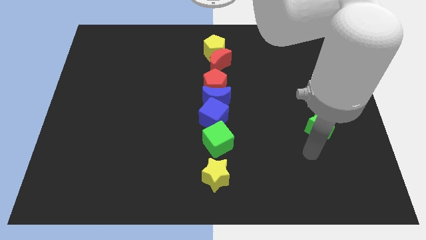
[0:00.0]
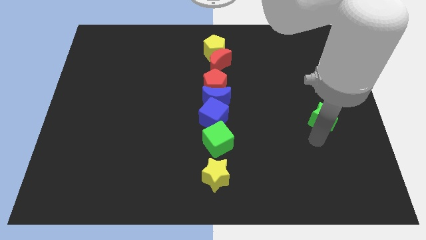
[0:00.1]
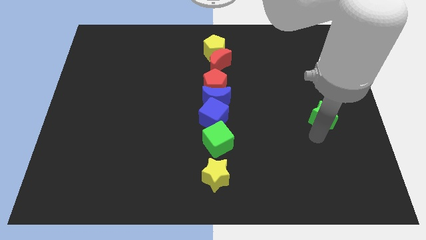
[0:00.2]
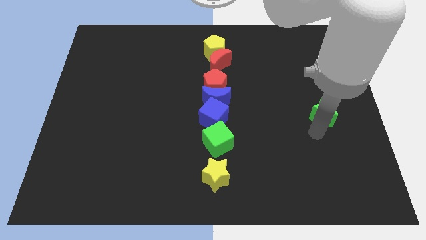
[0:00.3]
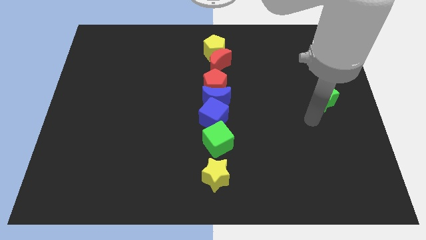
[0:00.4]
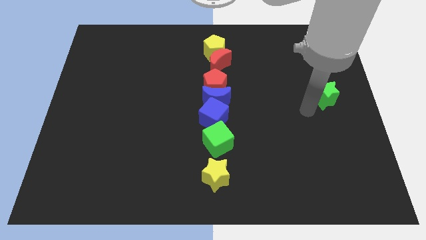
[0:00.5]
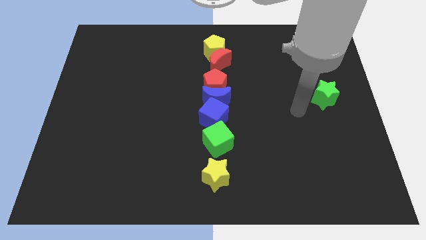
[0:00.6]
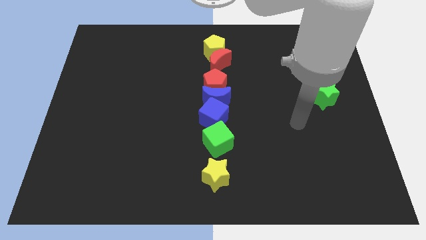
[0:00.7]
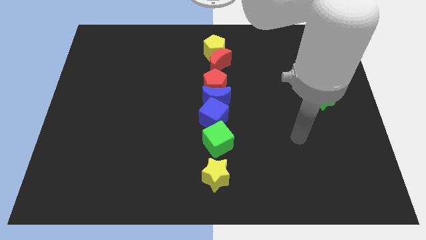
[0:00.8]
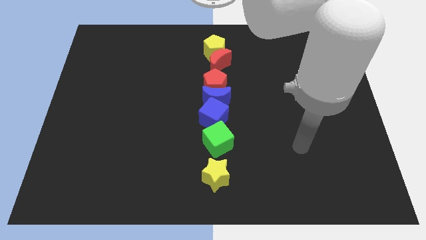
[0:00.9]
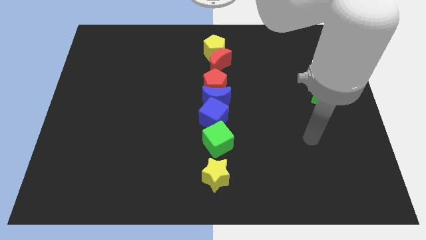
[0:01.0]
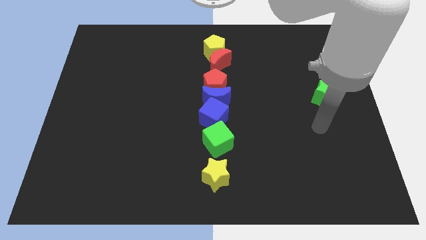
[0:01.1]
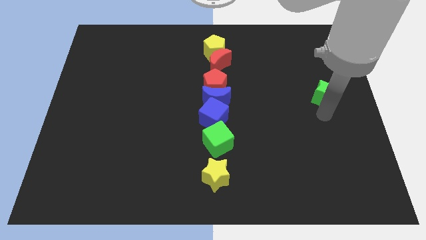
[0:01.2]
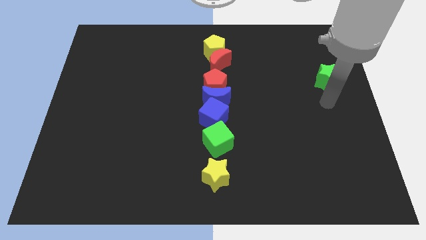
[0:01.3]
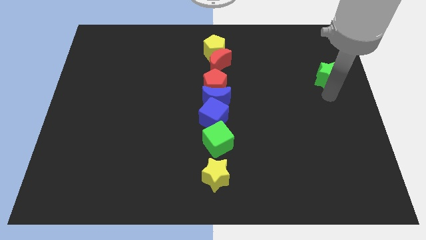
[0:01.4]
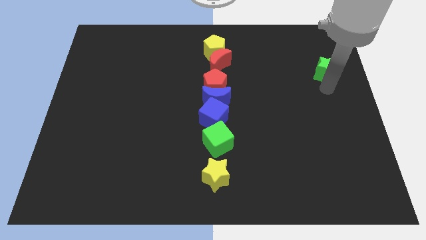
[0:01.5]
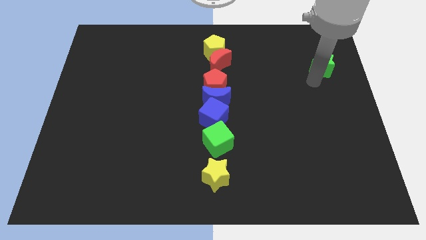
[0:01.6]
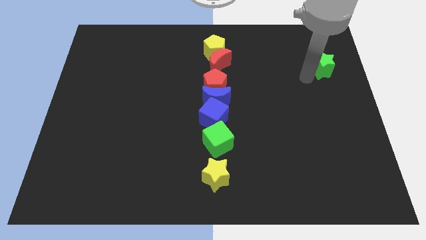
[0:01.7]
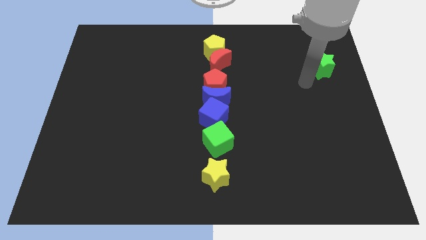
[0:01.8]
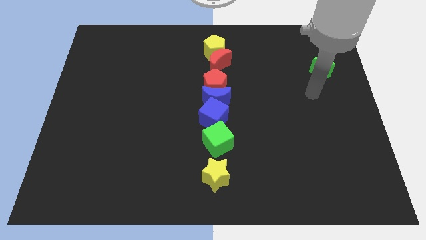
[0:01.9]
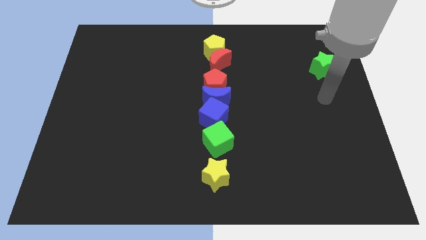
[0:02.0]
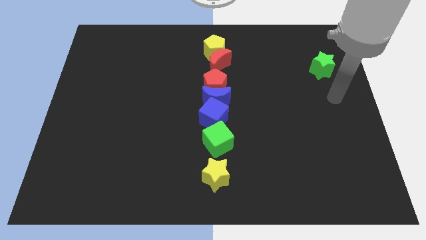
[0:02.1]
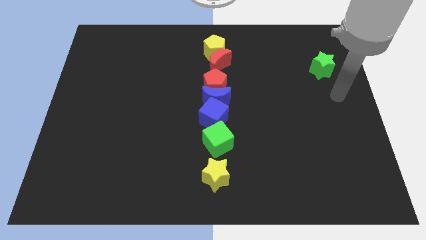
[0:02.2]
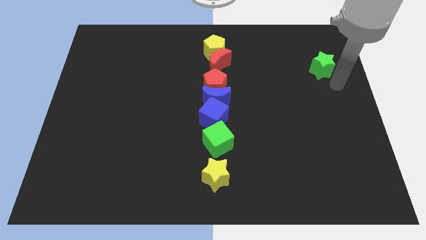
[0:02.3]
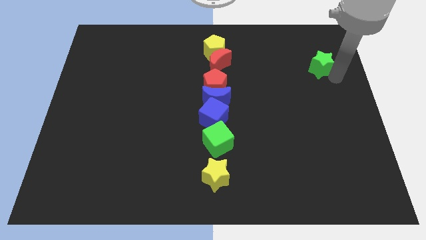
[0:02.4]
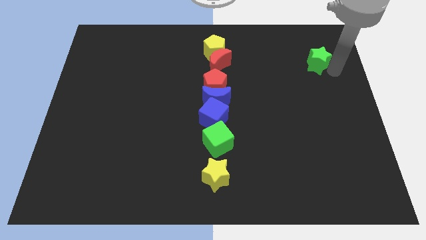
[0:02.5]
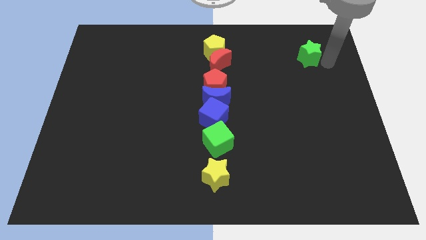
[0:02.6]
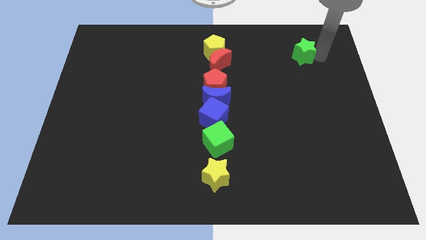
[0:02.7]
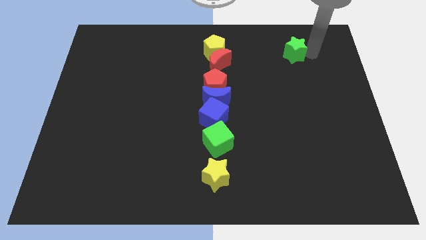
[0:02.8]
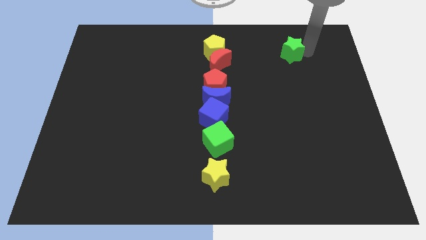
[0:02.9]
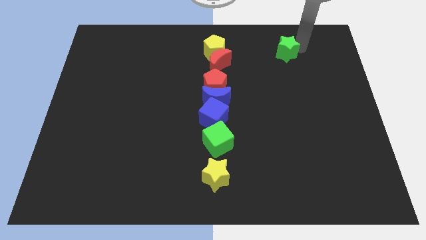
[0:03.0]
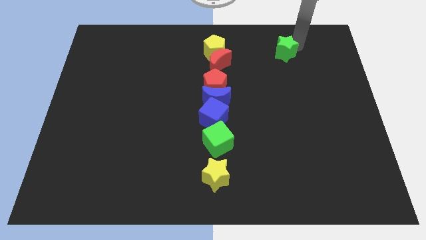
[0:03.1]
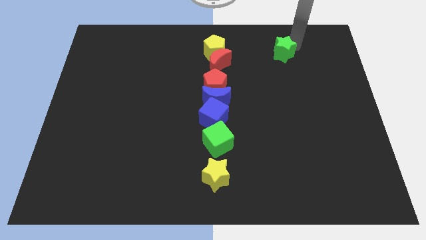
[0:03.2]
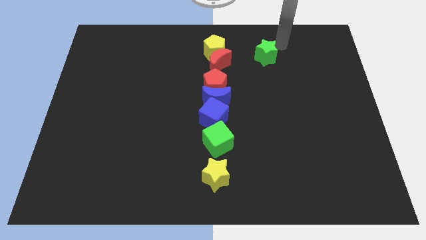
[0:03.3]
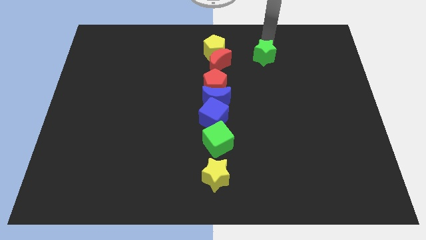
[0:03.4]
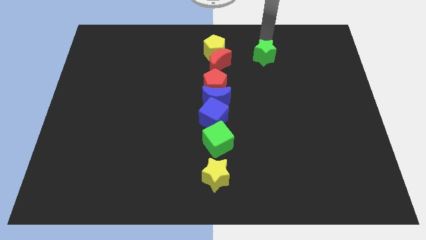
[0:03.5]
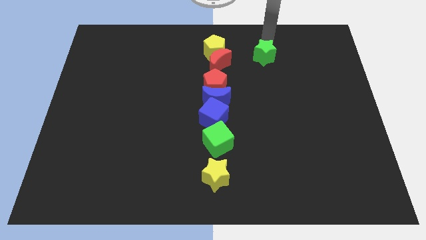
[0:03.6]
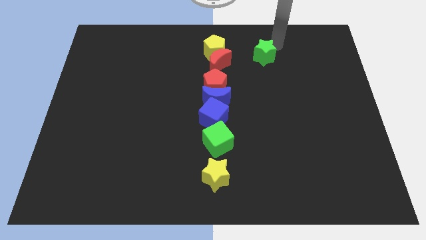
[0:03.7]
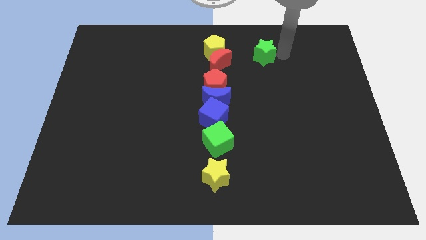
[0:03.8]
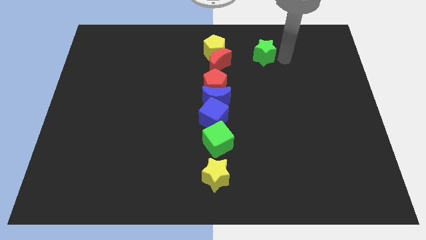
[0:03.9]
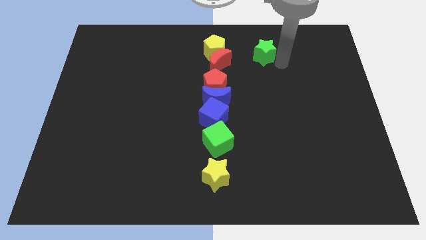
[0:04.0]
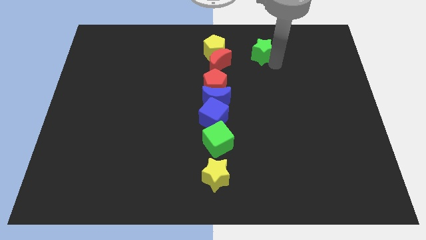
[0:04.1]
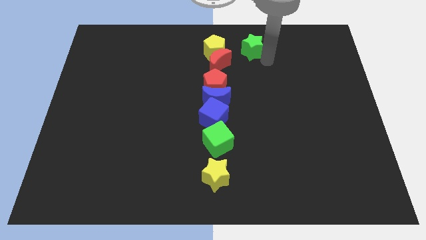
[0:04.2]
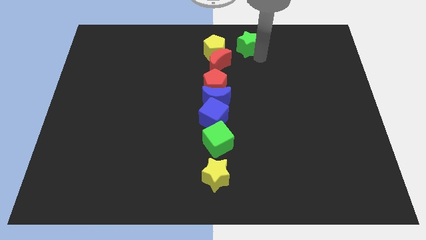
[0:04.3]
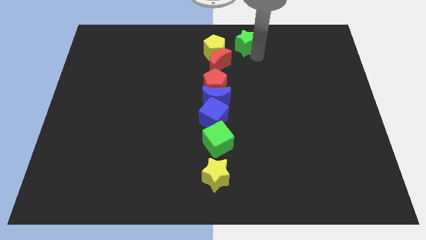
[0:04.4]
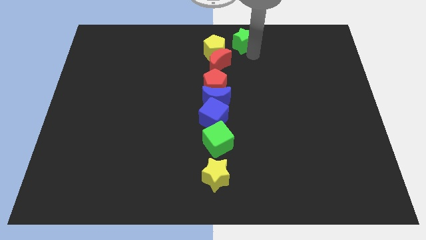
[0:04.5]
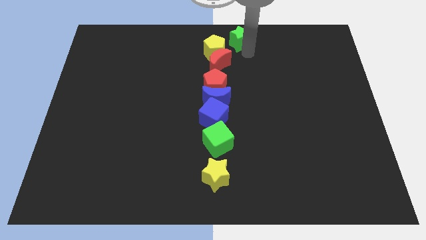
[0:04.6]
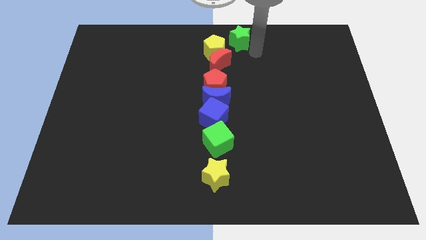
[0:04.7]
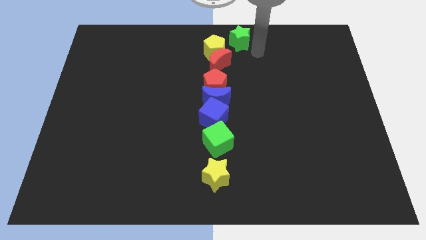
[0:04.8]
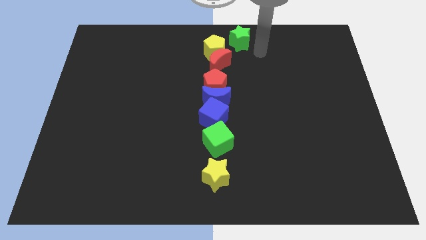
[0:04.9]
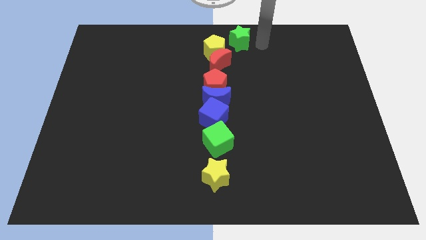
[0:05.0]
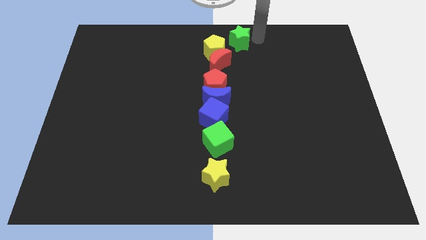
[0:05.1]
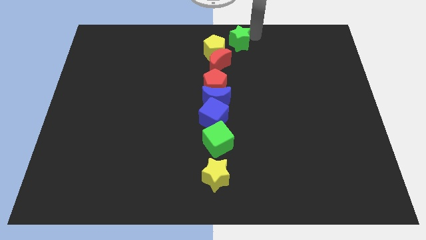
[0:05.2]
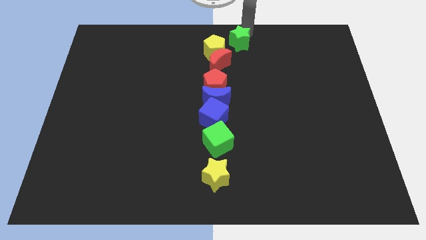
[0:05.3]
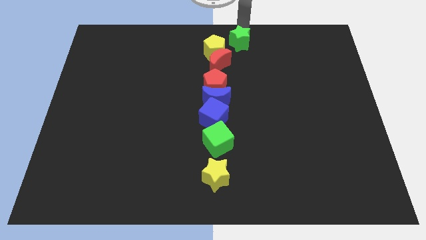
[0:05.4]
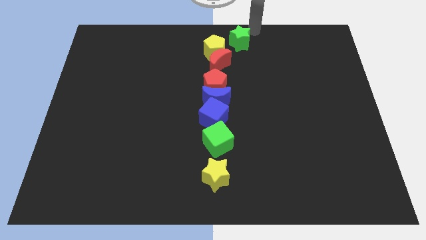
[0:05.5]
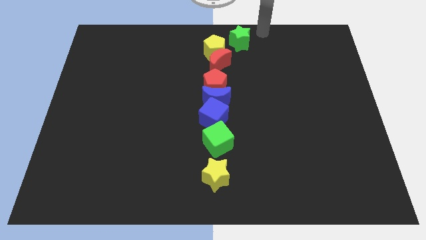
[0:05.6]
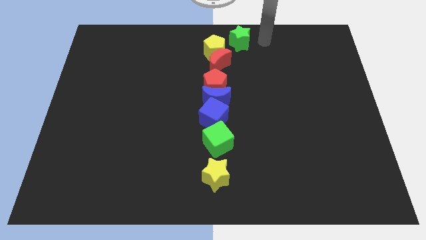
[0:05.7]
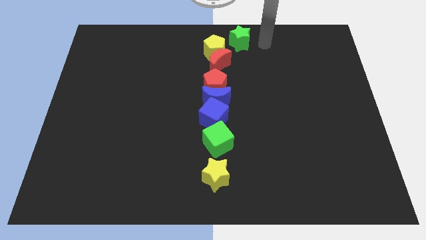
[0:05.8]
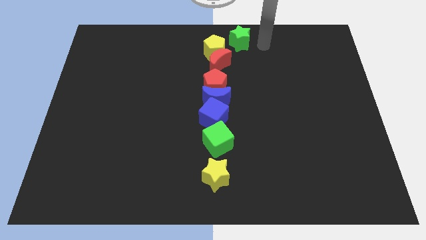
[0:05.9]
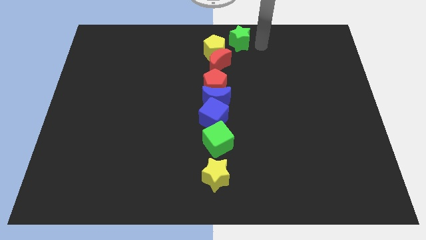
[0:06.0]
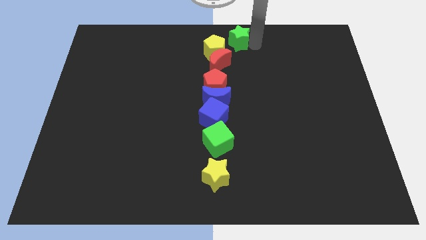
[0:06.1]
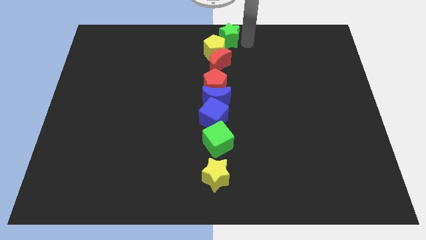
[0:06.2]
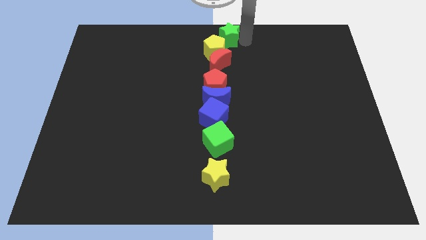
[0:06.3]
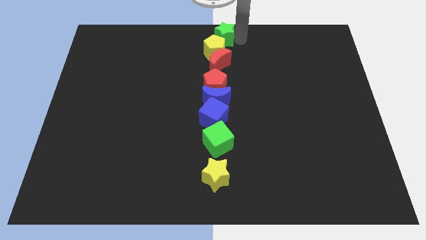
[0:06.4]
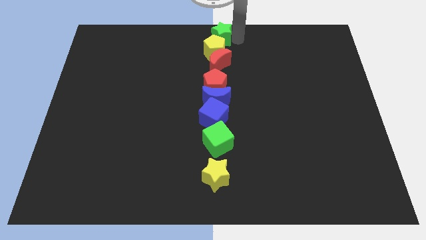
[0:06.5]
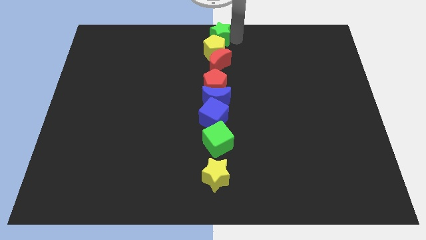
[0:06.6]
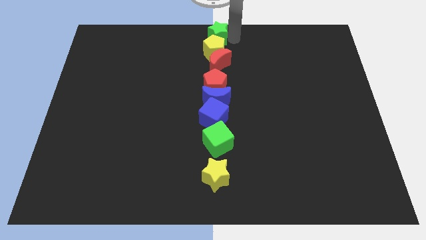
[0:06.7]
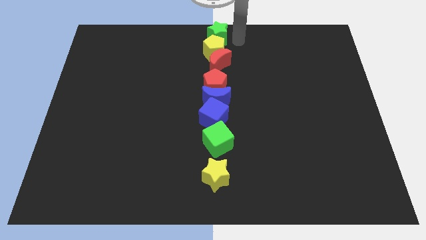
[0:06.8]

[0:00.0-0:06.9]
place the green star on top center of the board

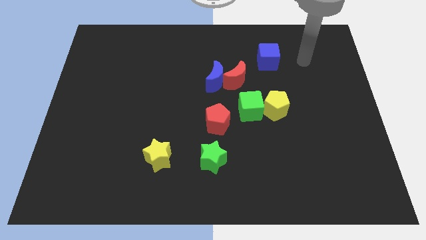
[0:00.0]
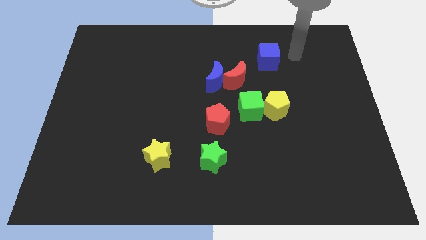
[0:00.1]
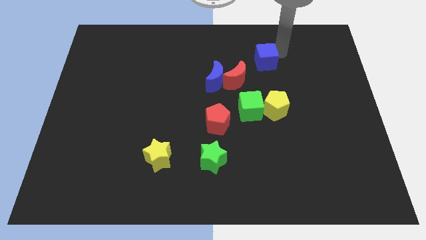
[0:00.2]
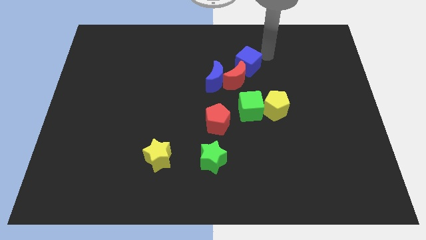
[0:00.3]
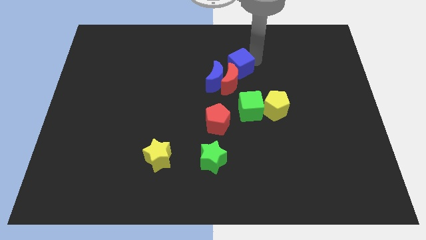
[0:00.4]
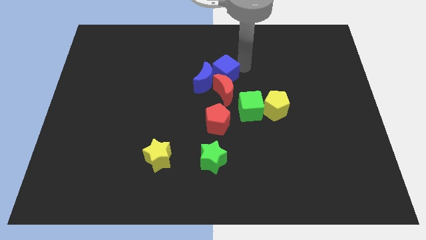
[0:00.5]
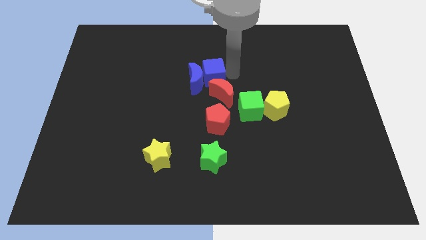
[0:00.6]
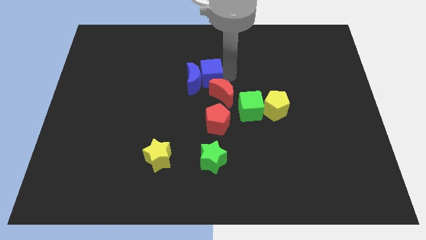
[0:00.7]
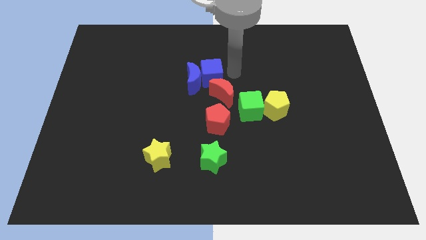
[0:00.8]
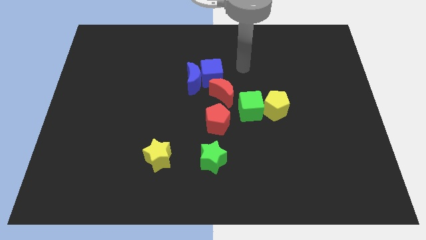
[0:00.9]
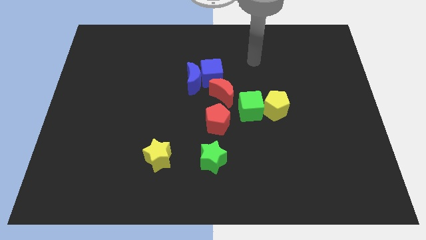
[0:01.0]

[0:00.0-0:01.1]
place the blue cube vertically above the red moon

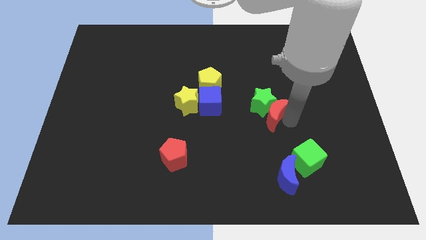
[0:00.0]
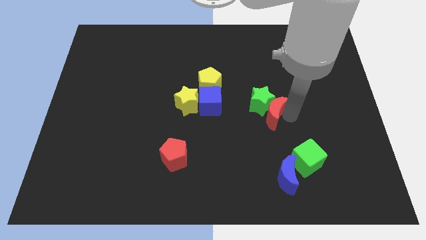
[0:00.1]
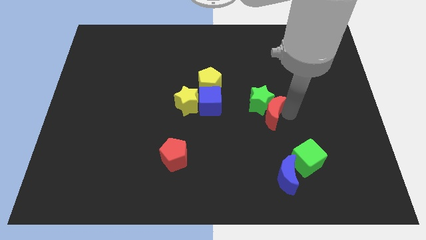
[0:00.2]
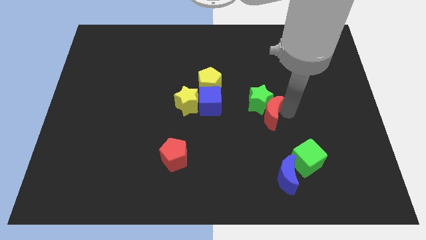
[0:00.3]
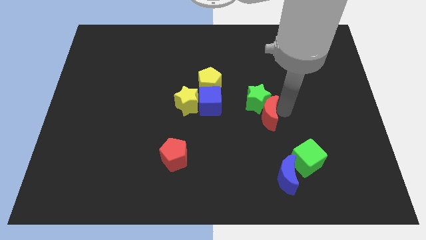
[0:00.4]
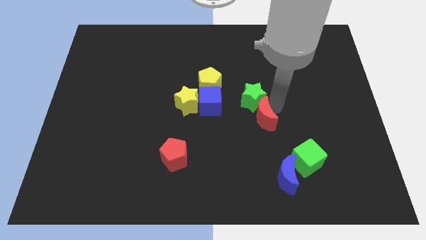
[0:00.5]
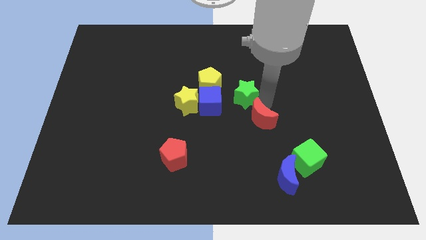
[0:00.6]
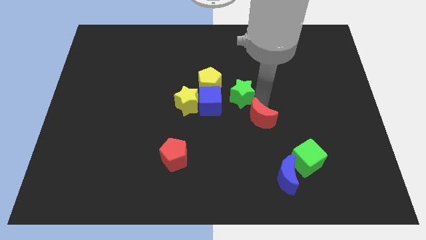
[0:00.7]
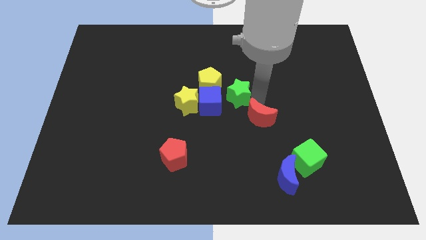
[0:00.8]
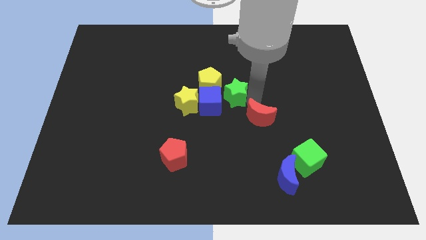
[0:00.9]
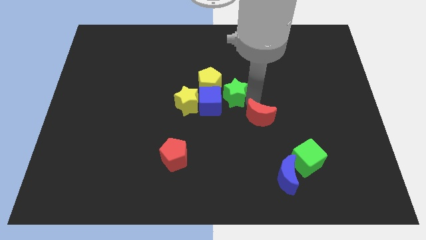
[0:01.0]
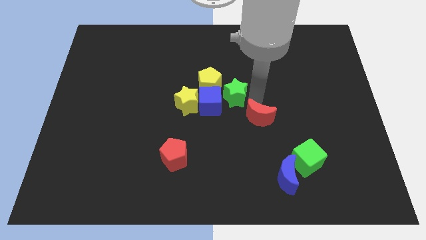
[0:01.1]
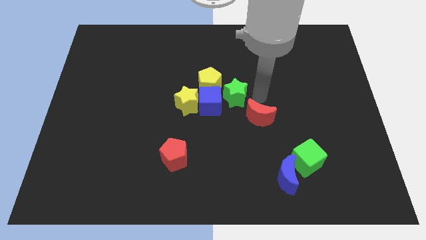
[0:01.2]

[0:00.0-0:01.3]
push the green star to the center of the board
